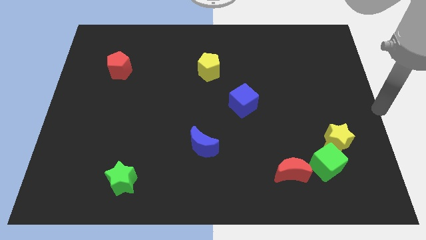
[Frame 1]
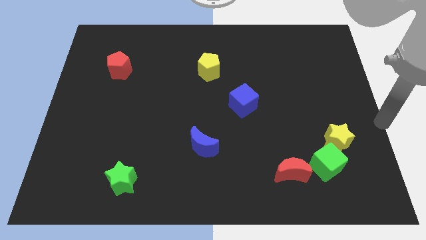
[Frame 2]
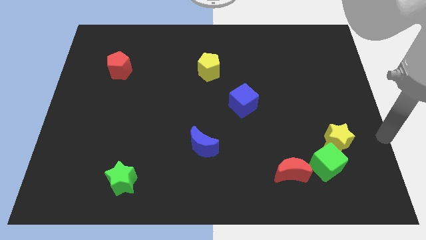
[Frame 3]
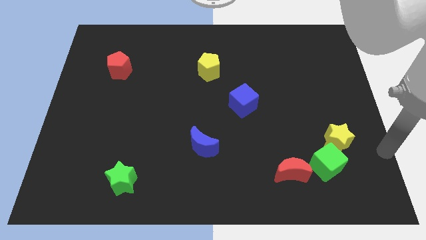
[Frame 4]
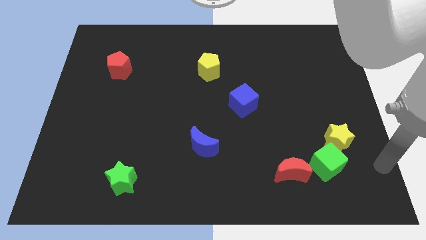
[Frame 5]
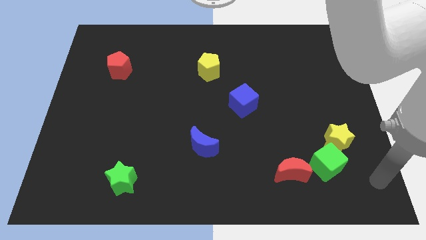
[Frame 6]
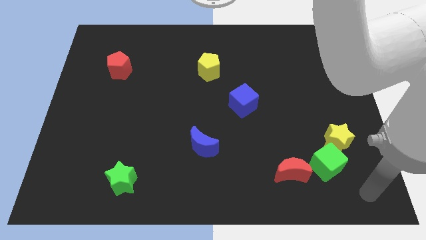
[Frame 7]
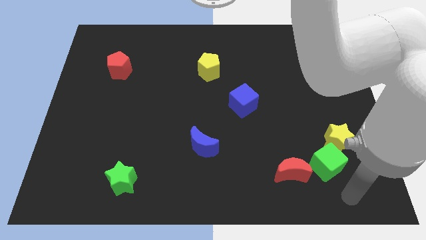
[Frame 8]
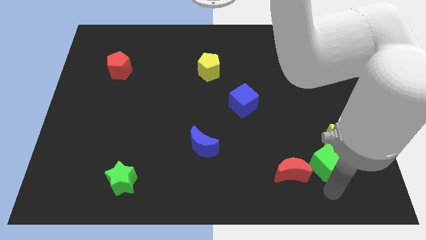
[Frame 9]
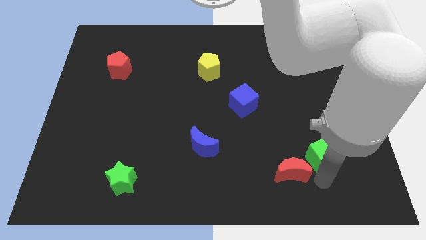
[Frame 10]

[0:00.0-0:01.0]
place your arm below green cube

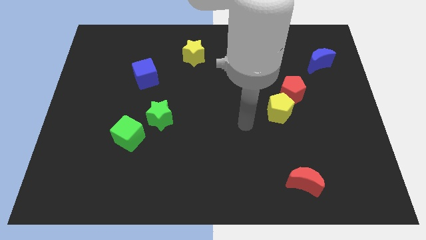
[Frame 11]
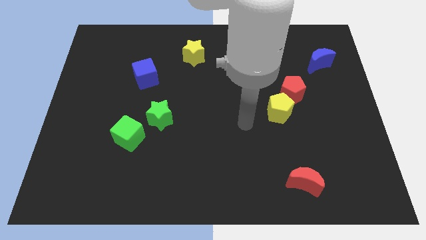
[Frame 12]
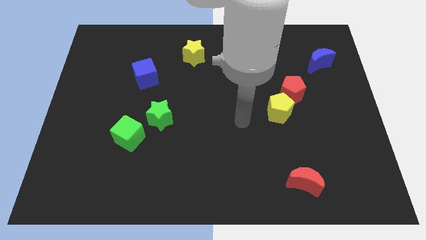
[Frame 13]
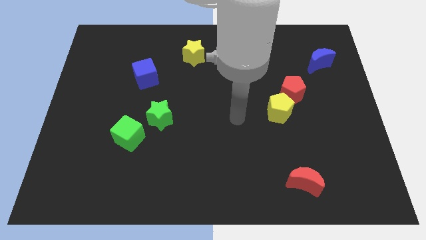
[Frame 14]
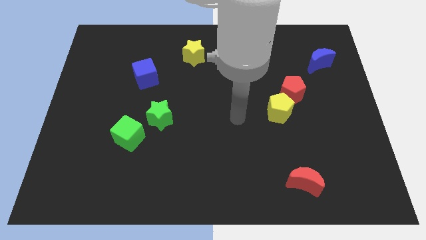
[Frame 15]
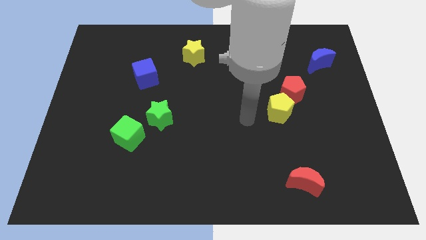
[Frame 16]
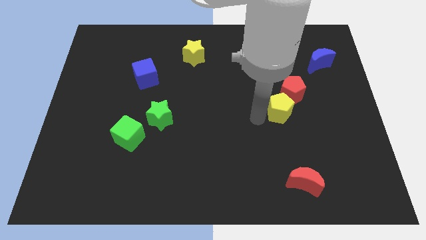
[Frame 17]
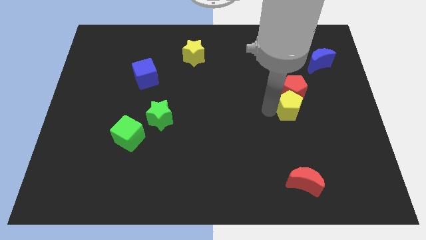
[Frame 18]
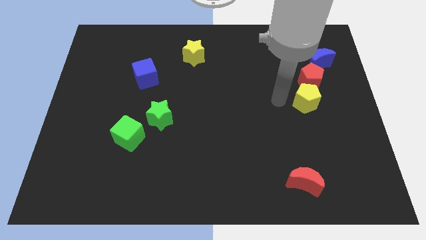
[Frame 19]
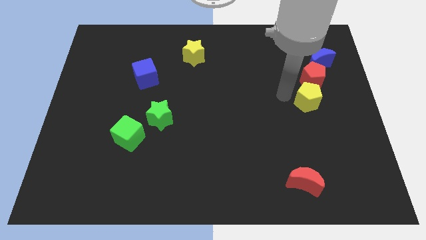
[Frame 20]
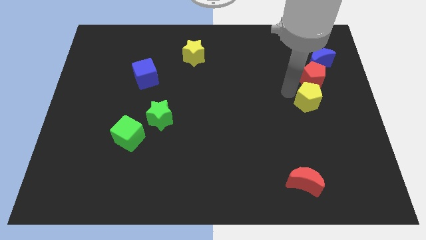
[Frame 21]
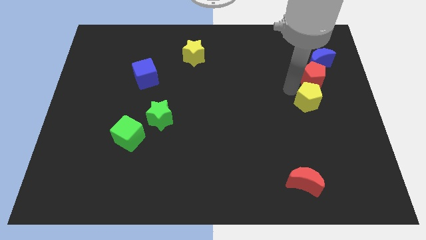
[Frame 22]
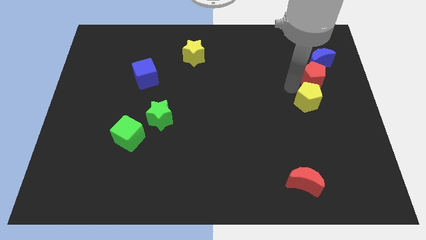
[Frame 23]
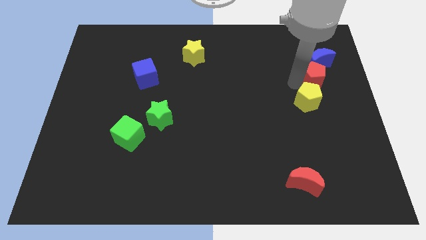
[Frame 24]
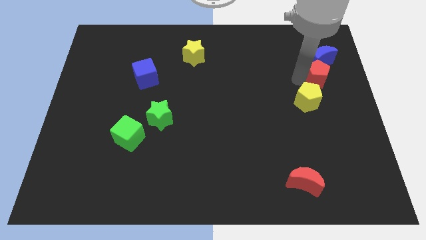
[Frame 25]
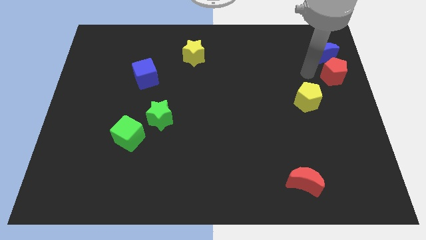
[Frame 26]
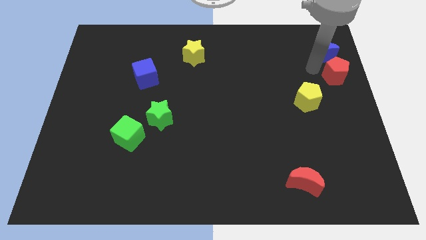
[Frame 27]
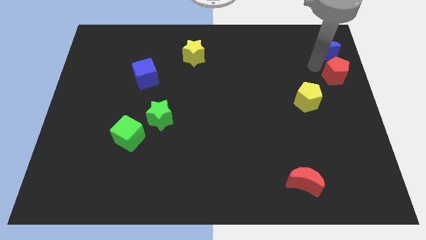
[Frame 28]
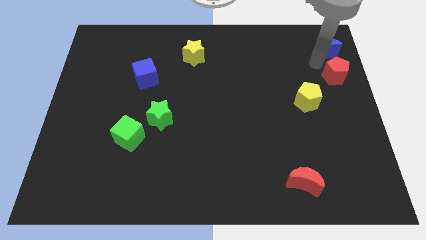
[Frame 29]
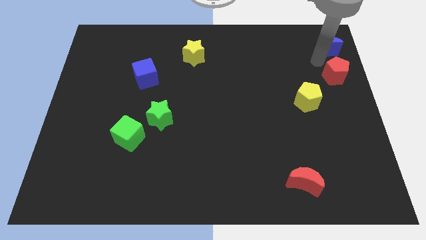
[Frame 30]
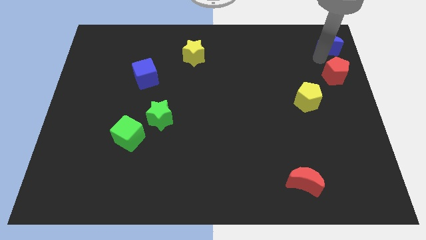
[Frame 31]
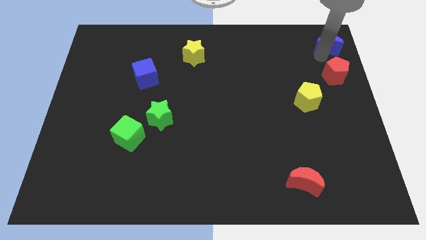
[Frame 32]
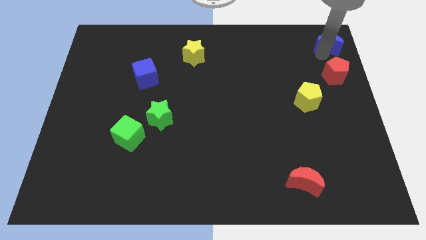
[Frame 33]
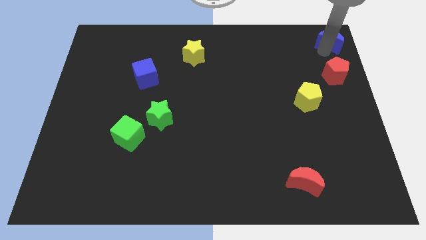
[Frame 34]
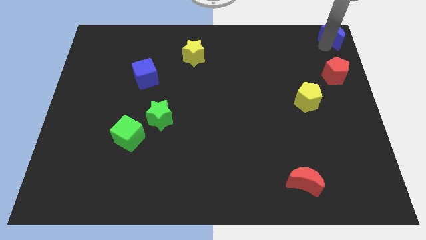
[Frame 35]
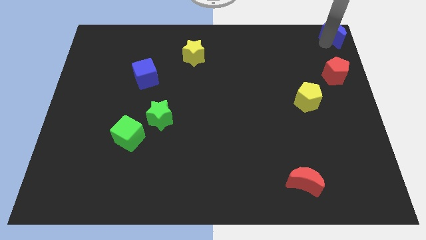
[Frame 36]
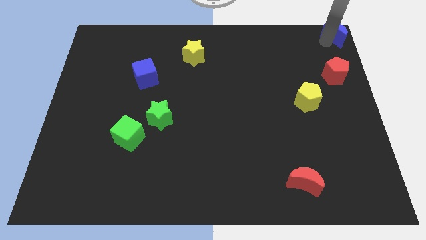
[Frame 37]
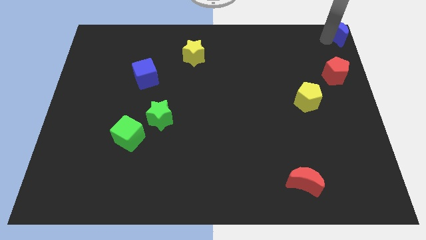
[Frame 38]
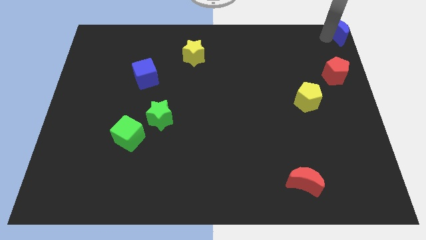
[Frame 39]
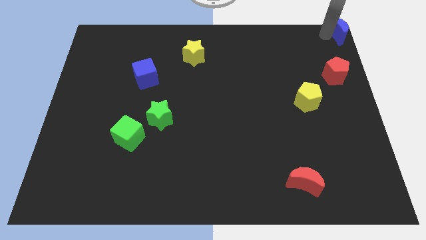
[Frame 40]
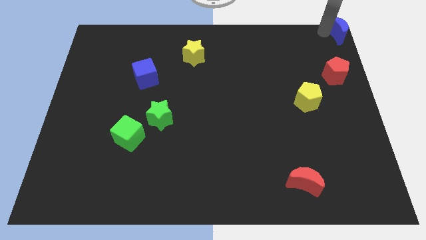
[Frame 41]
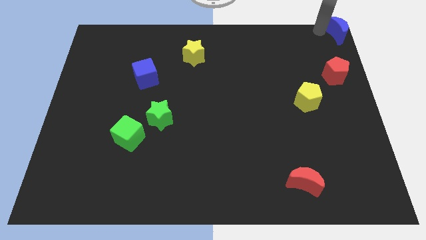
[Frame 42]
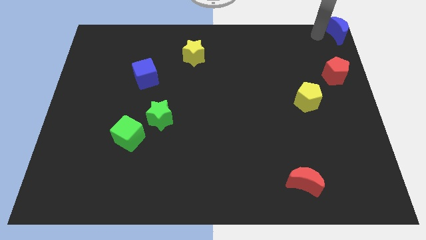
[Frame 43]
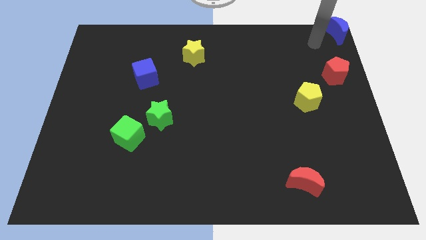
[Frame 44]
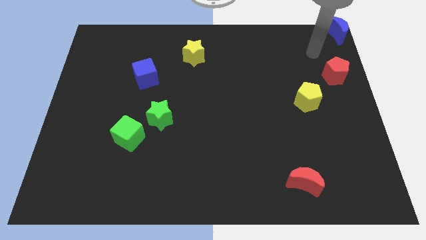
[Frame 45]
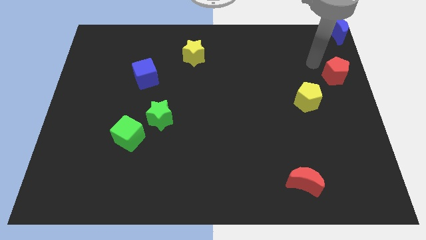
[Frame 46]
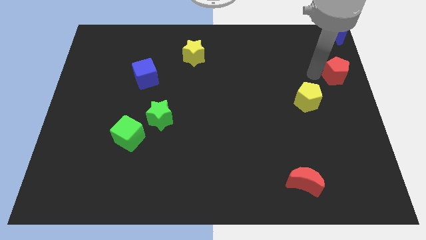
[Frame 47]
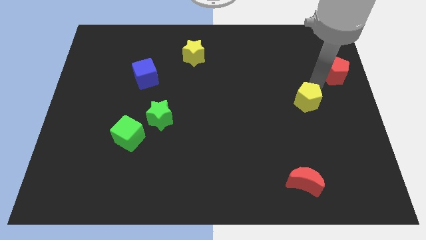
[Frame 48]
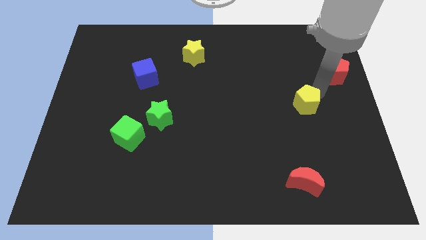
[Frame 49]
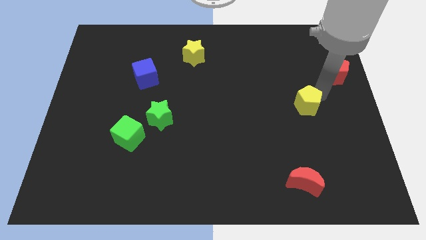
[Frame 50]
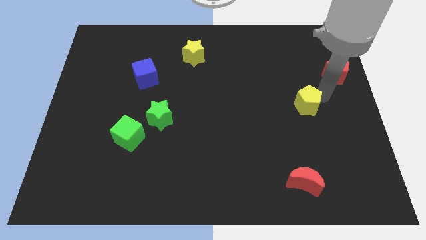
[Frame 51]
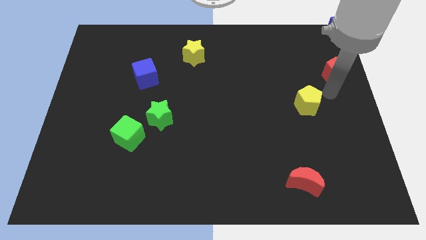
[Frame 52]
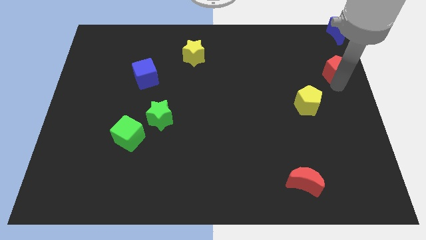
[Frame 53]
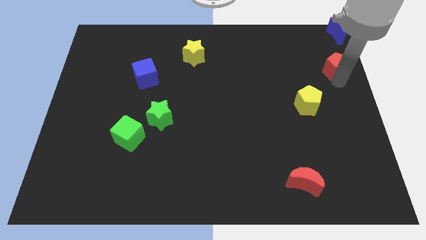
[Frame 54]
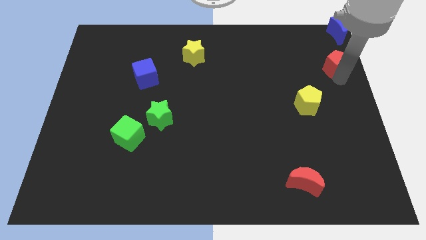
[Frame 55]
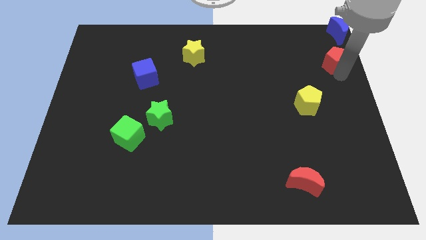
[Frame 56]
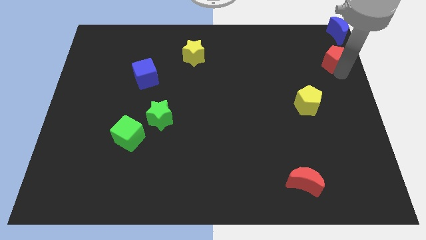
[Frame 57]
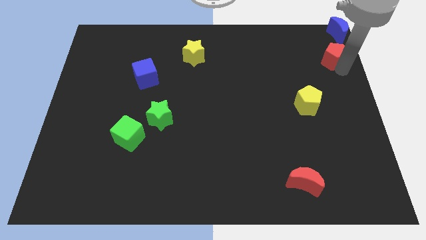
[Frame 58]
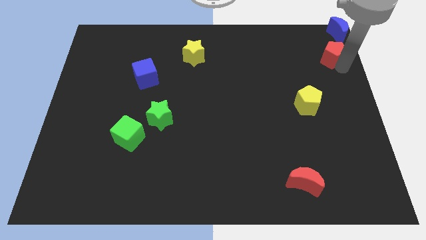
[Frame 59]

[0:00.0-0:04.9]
push the red pentagon and the blue moon towards the top right
